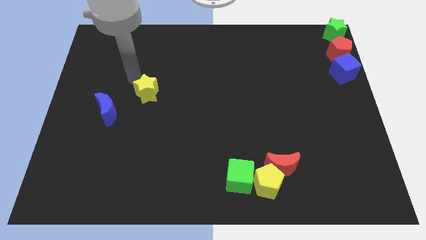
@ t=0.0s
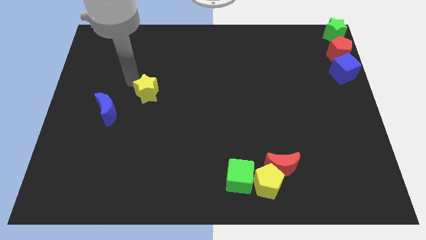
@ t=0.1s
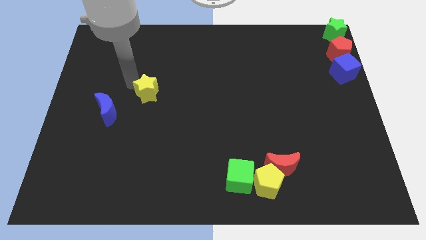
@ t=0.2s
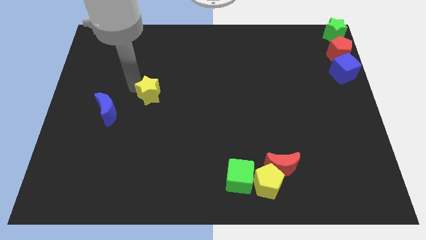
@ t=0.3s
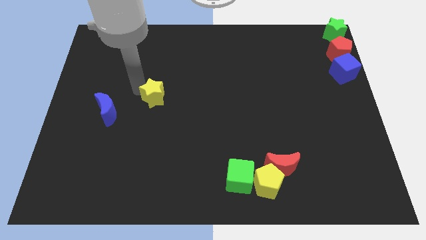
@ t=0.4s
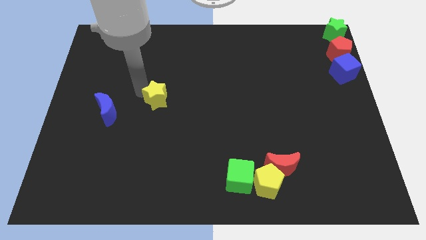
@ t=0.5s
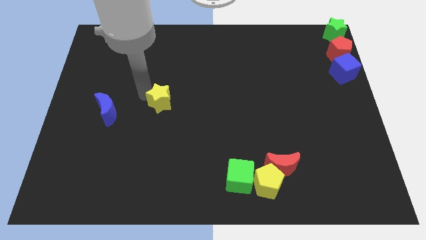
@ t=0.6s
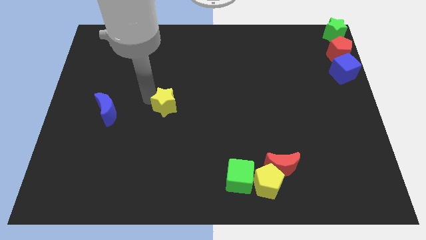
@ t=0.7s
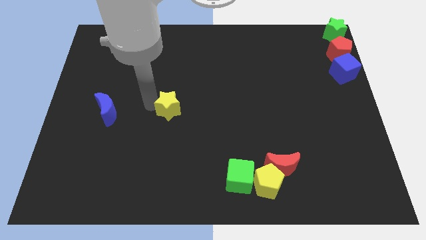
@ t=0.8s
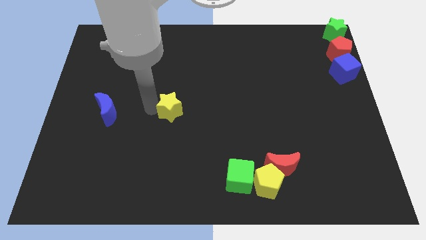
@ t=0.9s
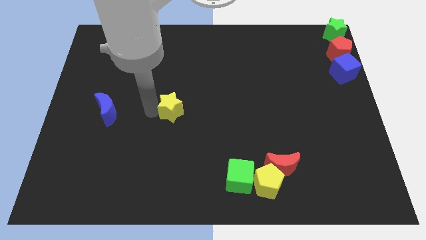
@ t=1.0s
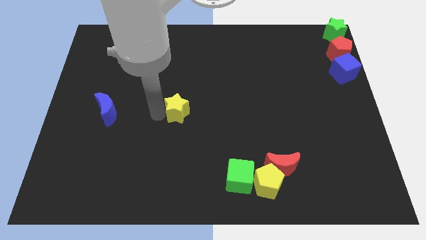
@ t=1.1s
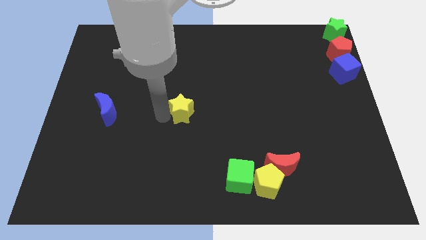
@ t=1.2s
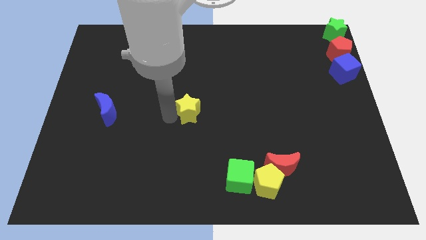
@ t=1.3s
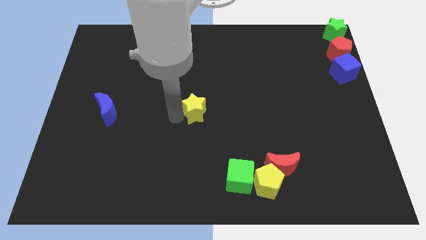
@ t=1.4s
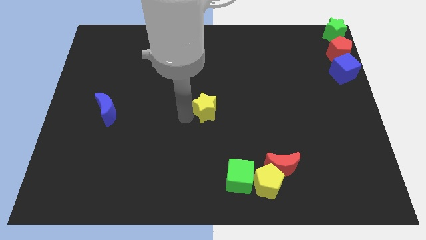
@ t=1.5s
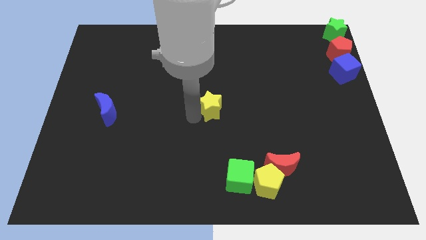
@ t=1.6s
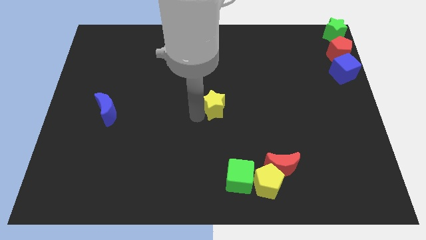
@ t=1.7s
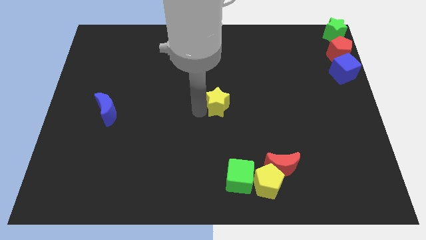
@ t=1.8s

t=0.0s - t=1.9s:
move the yellow star to the center of the board

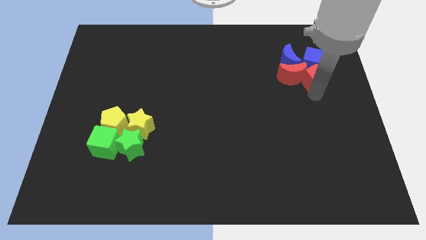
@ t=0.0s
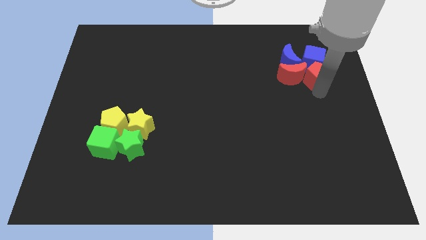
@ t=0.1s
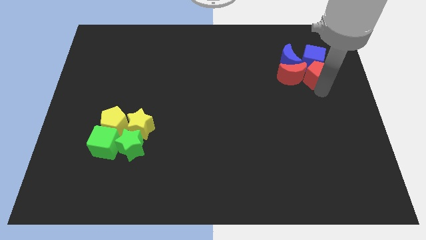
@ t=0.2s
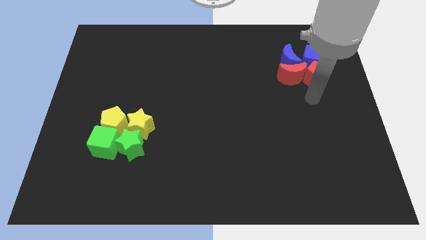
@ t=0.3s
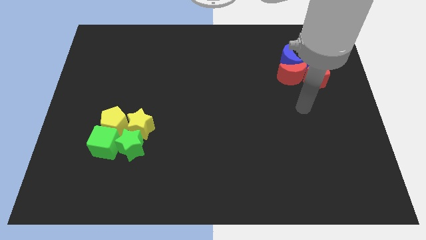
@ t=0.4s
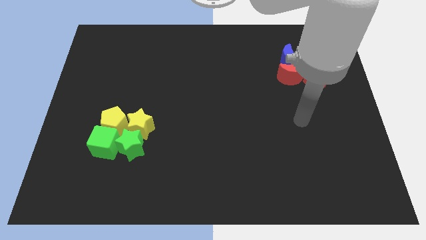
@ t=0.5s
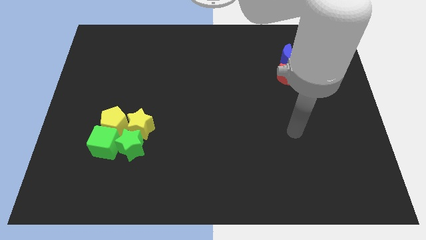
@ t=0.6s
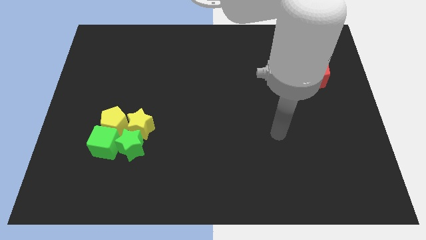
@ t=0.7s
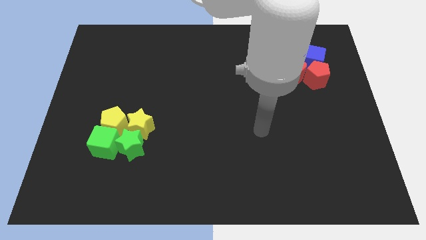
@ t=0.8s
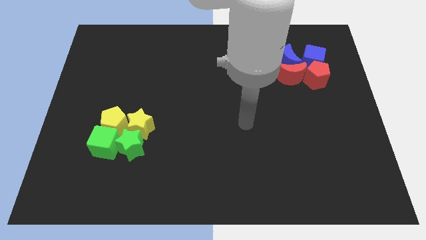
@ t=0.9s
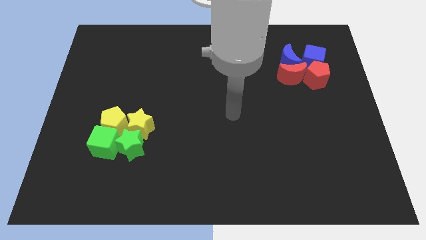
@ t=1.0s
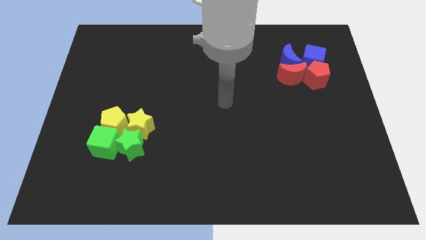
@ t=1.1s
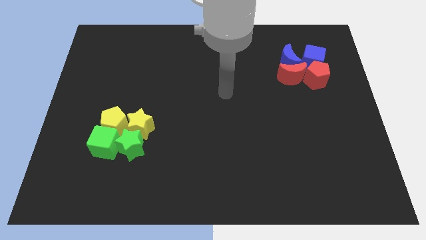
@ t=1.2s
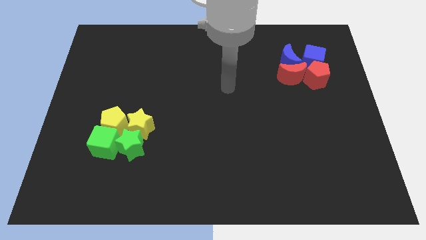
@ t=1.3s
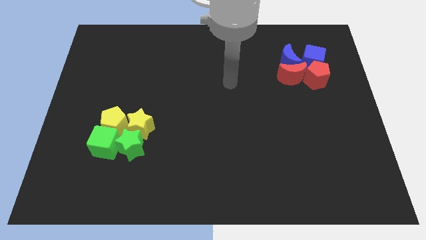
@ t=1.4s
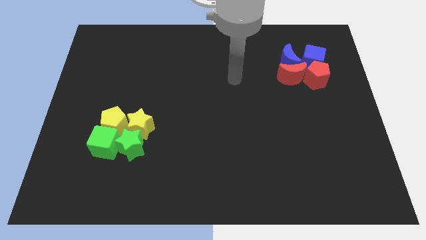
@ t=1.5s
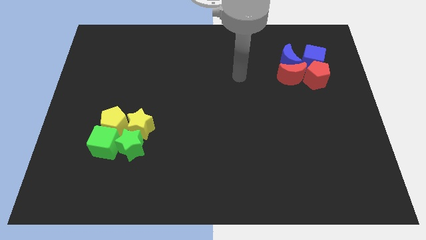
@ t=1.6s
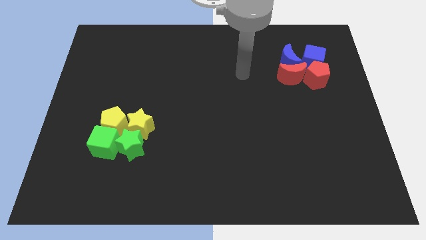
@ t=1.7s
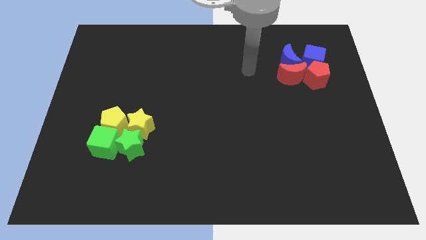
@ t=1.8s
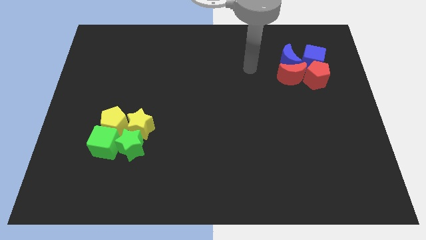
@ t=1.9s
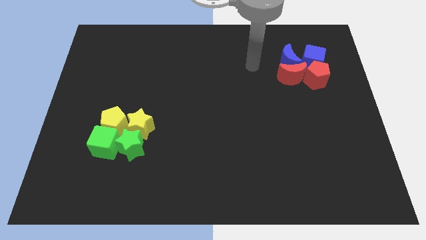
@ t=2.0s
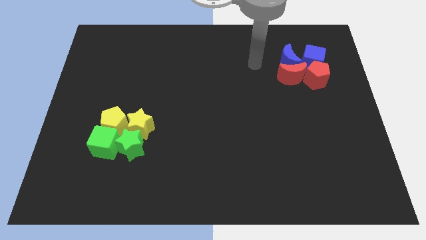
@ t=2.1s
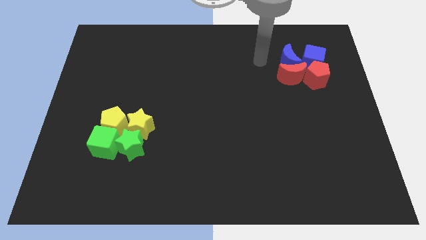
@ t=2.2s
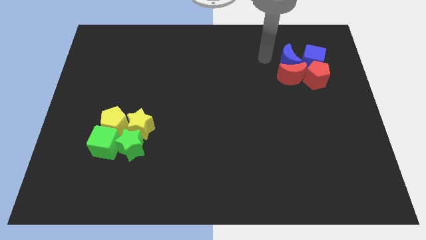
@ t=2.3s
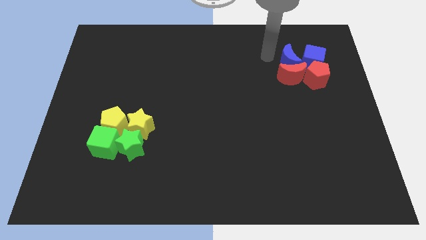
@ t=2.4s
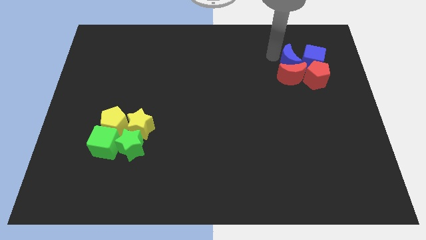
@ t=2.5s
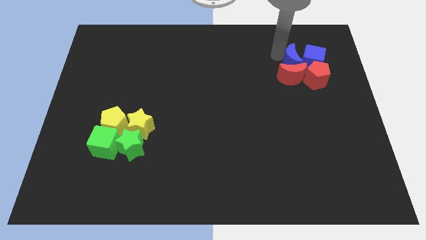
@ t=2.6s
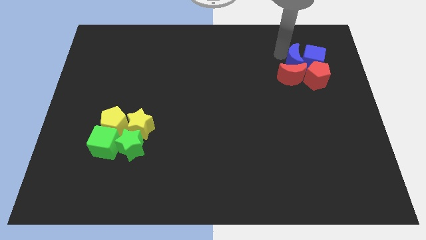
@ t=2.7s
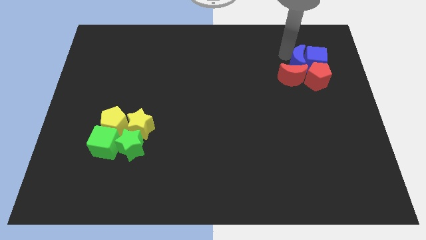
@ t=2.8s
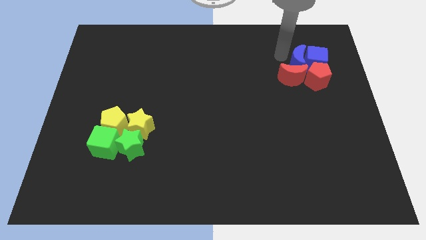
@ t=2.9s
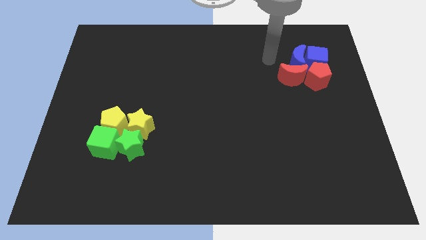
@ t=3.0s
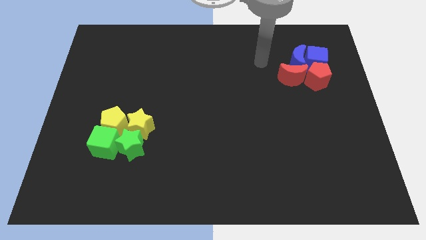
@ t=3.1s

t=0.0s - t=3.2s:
touch the blue crescent at the left

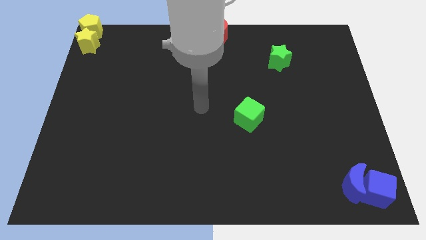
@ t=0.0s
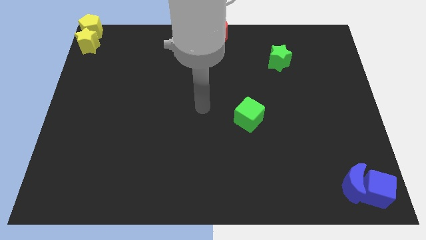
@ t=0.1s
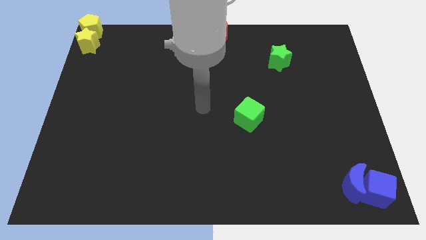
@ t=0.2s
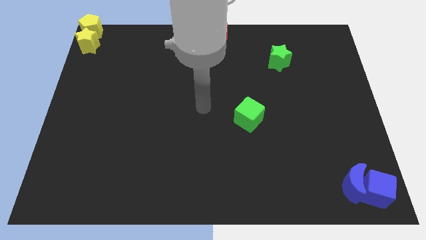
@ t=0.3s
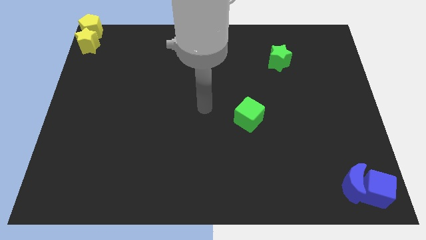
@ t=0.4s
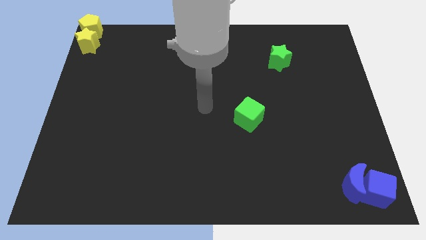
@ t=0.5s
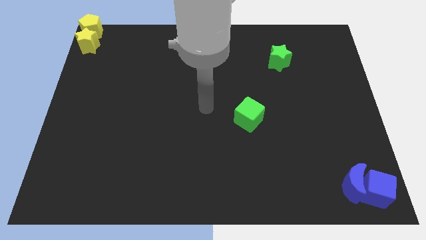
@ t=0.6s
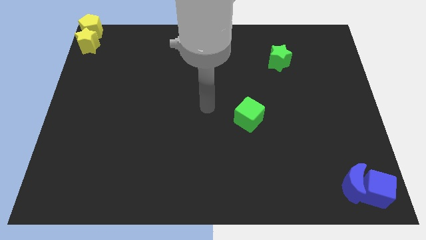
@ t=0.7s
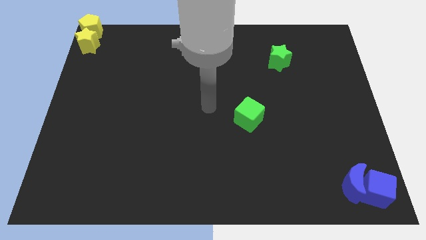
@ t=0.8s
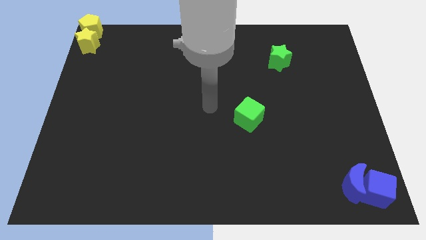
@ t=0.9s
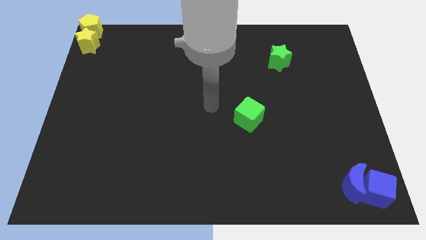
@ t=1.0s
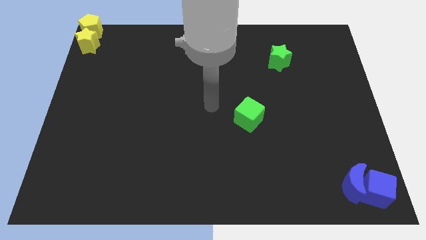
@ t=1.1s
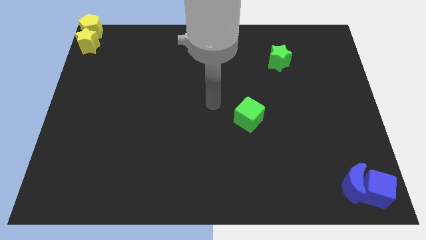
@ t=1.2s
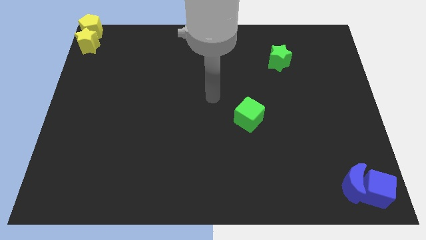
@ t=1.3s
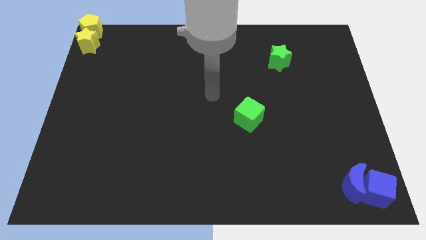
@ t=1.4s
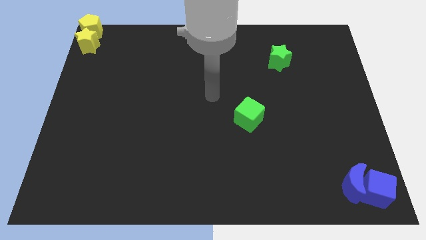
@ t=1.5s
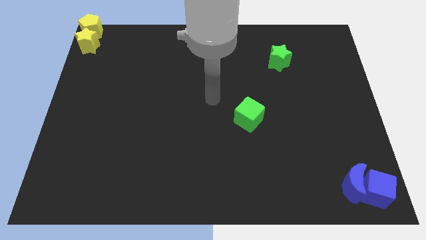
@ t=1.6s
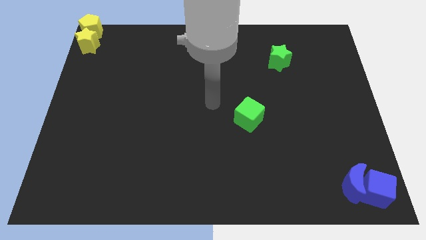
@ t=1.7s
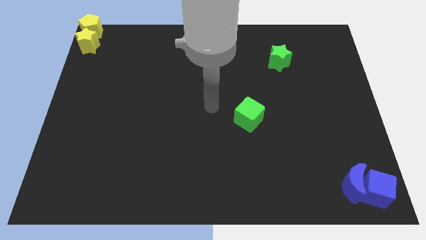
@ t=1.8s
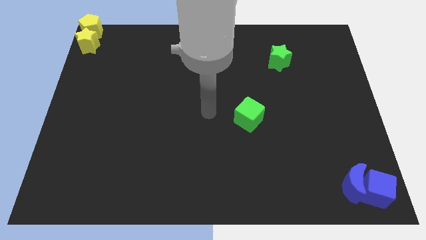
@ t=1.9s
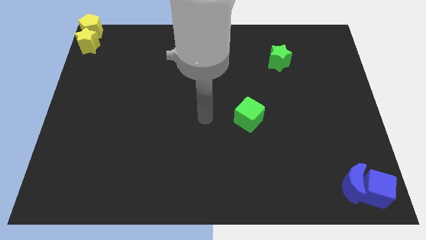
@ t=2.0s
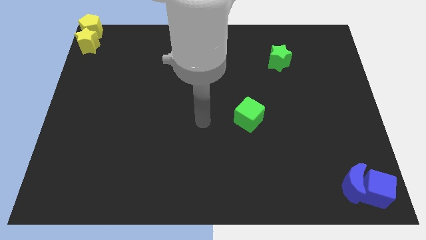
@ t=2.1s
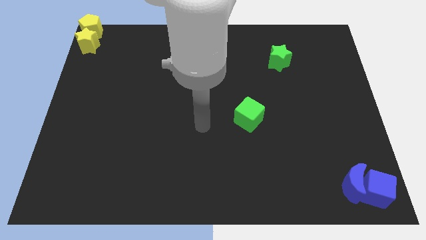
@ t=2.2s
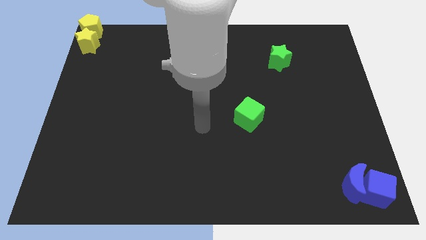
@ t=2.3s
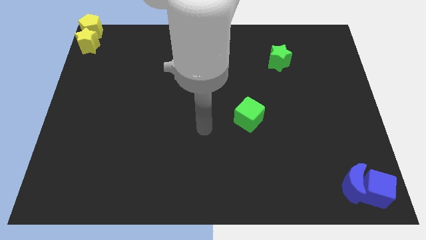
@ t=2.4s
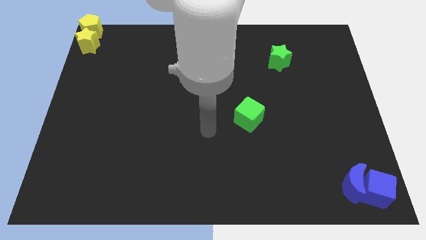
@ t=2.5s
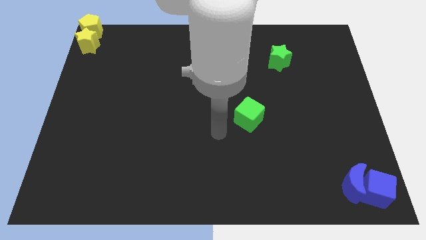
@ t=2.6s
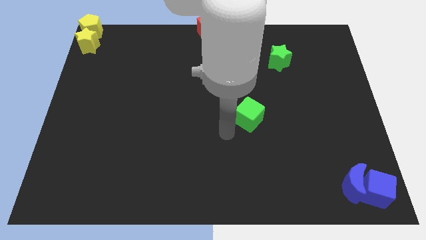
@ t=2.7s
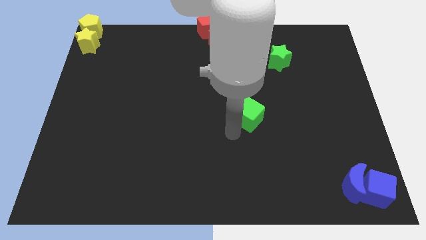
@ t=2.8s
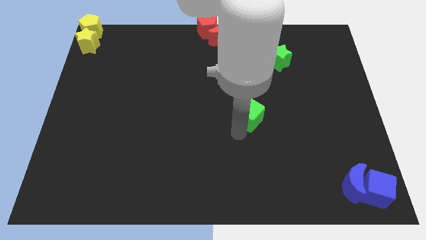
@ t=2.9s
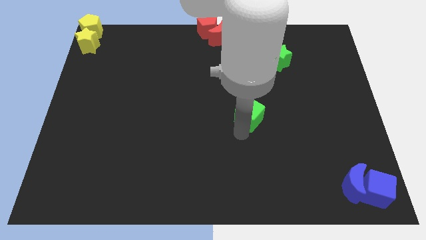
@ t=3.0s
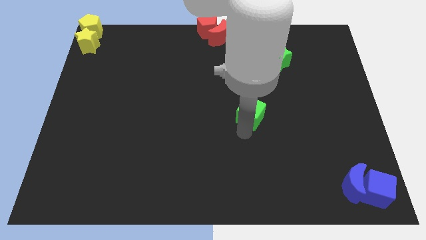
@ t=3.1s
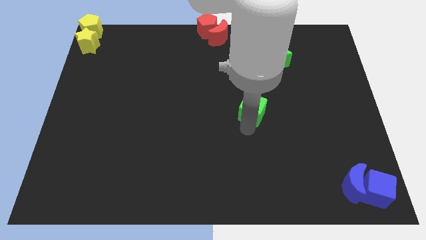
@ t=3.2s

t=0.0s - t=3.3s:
tap the bottom side of the green cube

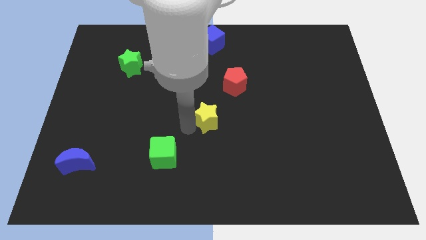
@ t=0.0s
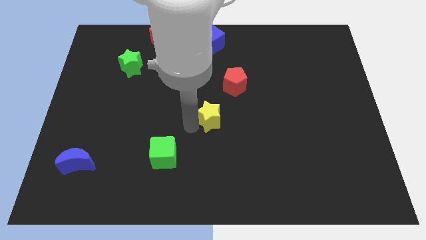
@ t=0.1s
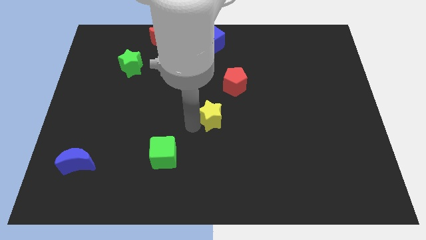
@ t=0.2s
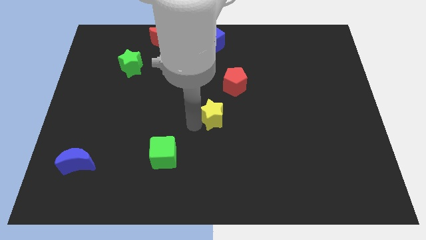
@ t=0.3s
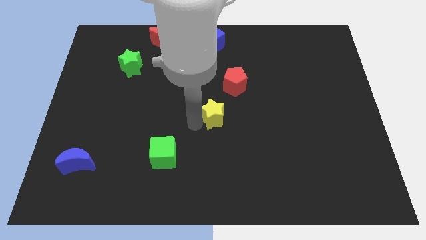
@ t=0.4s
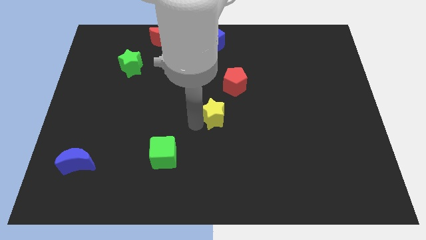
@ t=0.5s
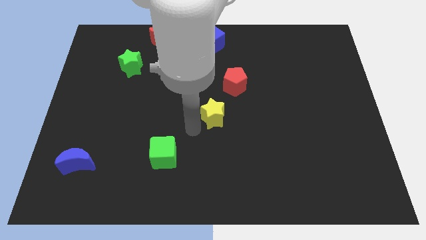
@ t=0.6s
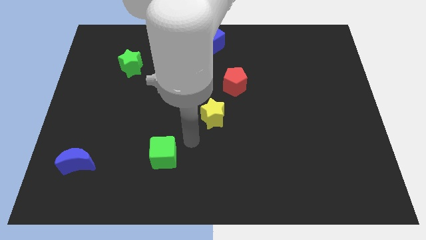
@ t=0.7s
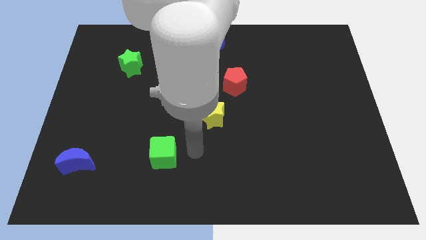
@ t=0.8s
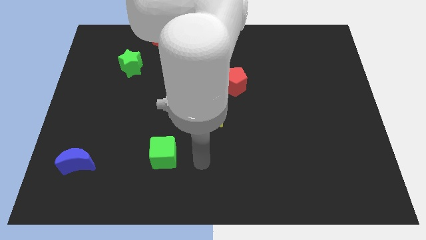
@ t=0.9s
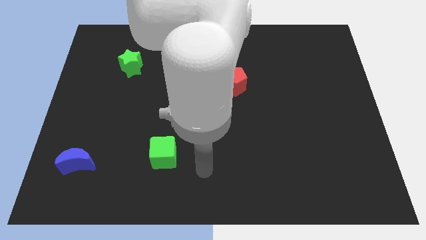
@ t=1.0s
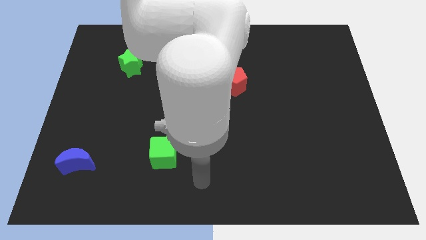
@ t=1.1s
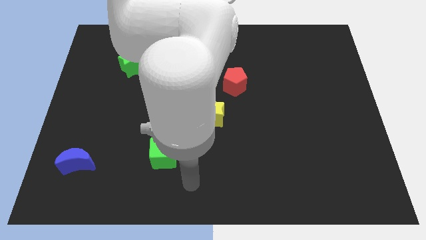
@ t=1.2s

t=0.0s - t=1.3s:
move the yellow star to the center
